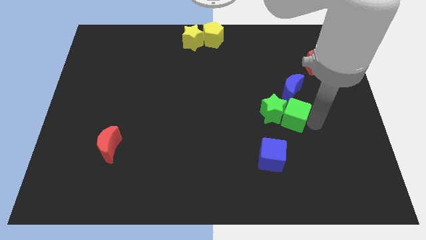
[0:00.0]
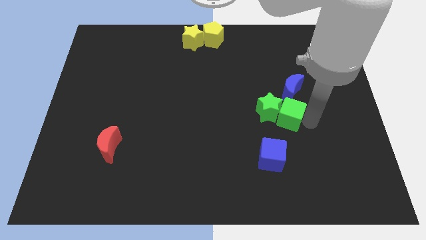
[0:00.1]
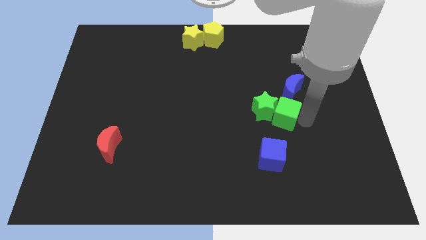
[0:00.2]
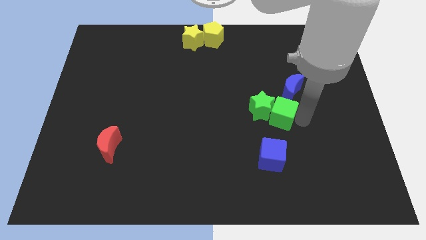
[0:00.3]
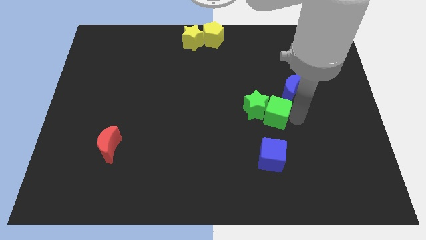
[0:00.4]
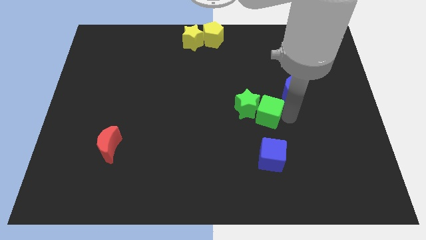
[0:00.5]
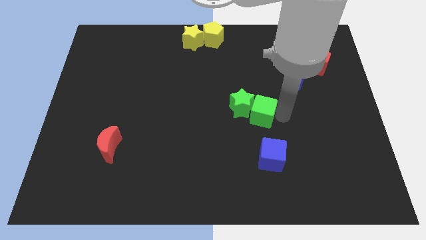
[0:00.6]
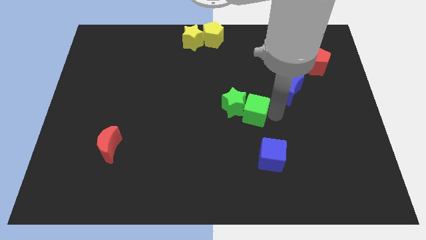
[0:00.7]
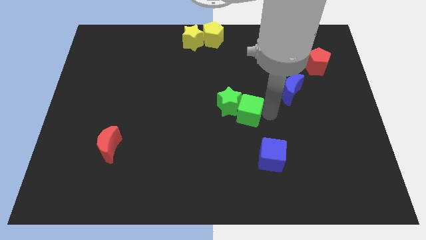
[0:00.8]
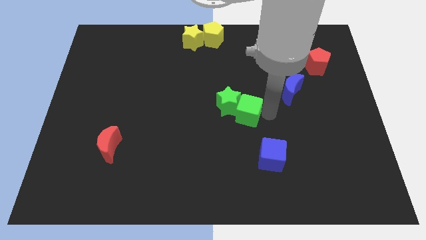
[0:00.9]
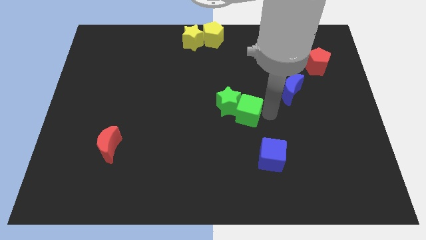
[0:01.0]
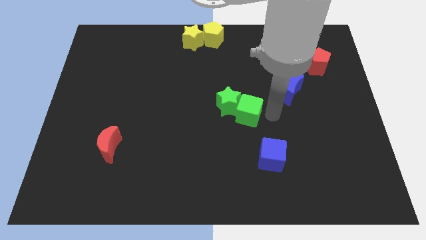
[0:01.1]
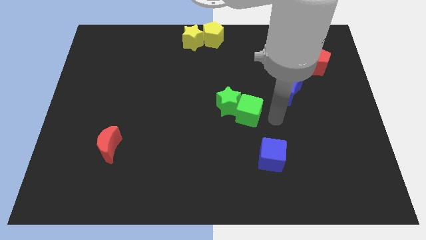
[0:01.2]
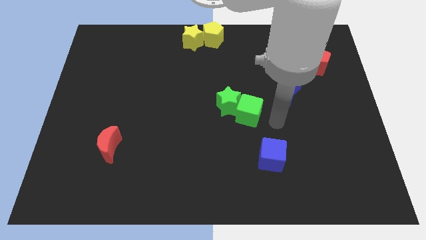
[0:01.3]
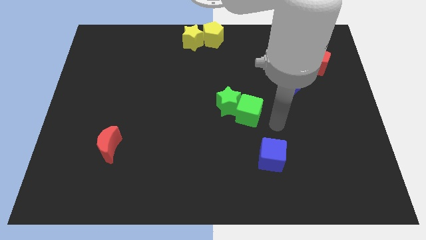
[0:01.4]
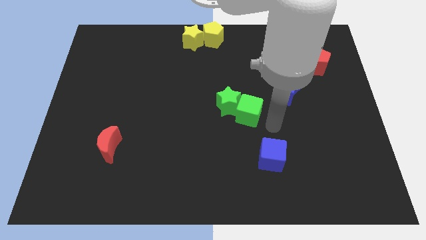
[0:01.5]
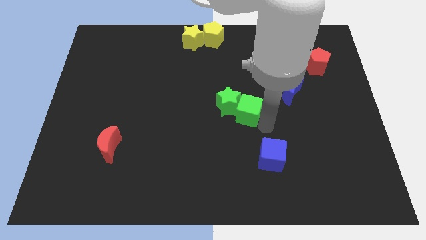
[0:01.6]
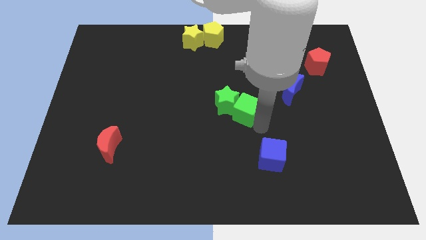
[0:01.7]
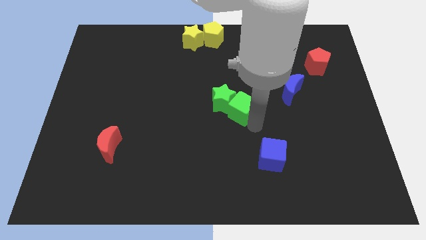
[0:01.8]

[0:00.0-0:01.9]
push the green blocks to the center of the board

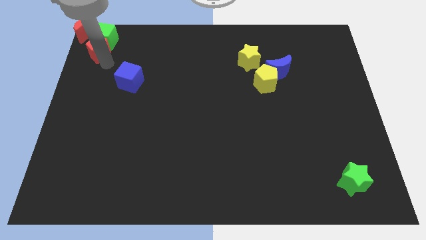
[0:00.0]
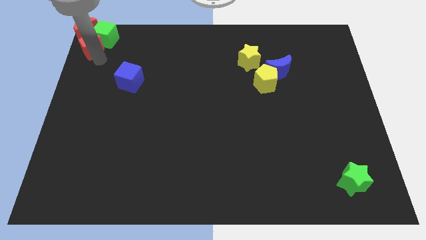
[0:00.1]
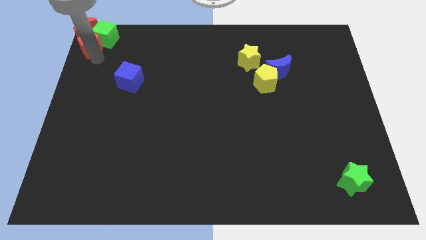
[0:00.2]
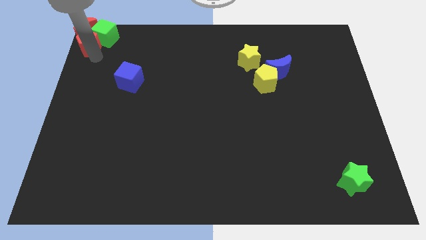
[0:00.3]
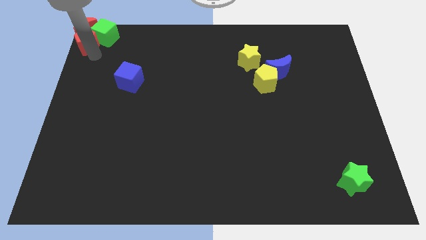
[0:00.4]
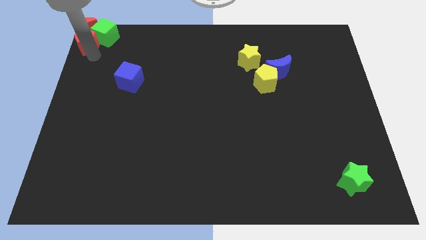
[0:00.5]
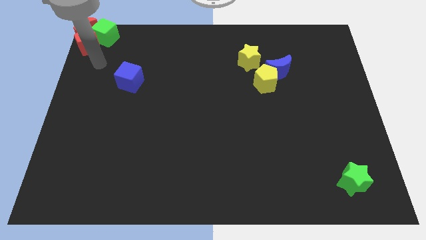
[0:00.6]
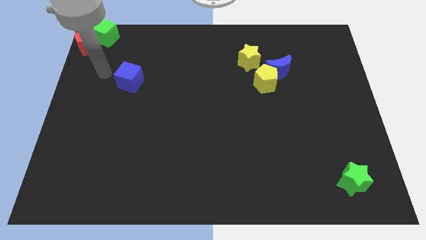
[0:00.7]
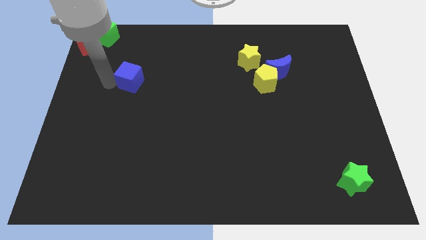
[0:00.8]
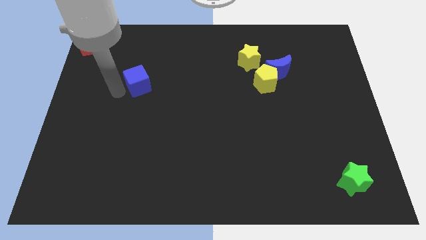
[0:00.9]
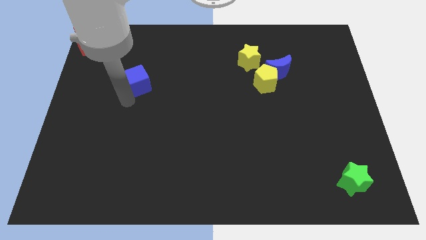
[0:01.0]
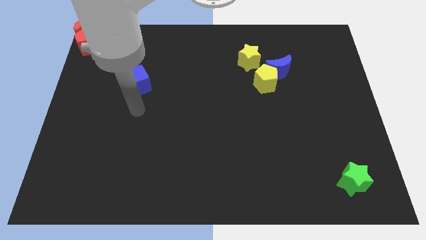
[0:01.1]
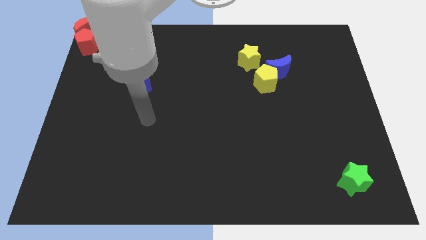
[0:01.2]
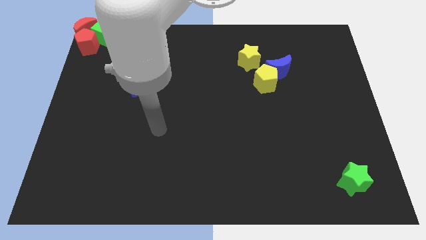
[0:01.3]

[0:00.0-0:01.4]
tap the blue cube

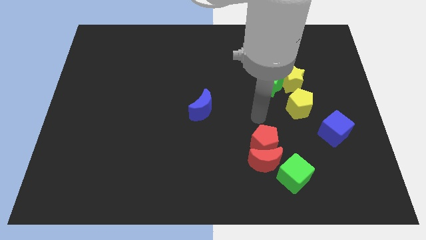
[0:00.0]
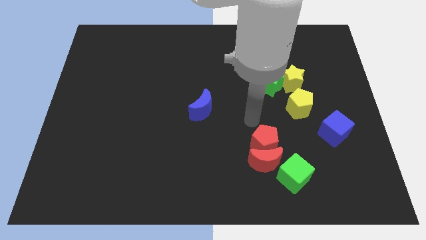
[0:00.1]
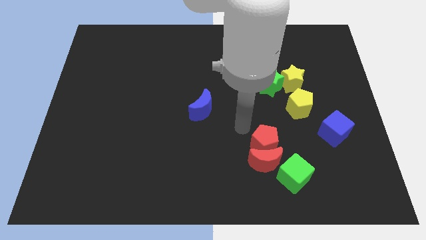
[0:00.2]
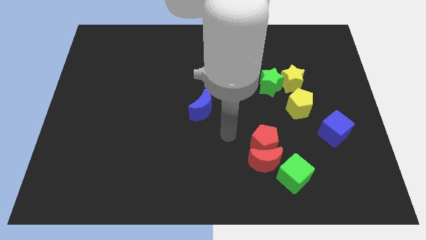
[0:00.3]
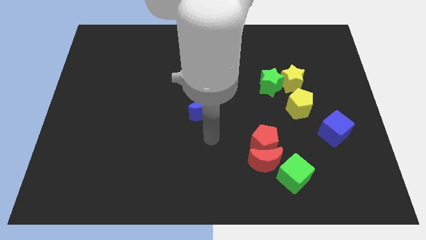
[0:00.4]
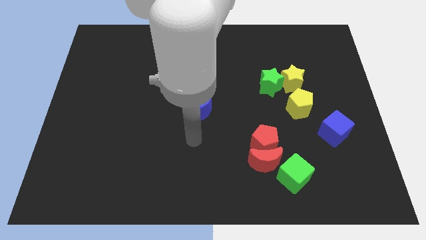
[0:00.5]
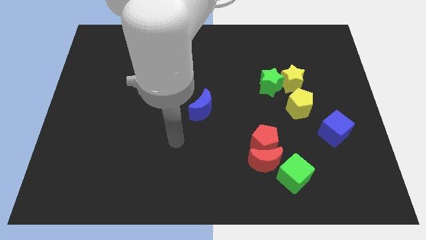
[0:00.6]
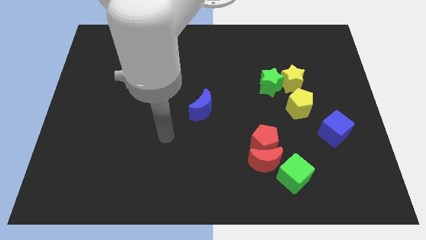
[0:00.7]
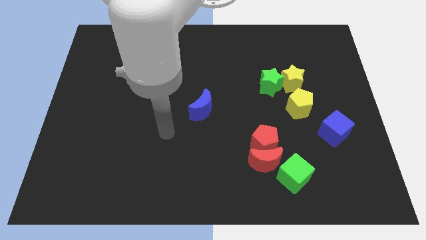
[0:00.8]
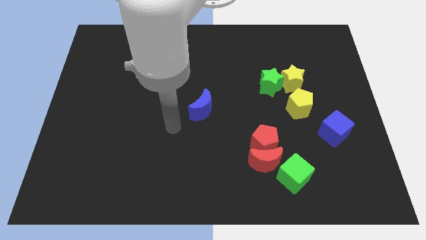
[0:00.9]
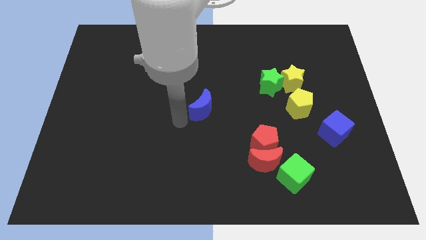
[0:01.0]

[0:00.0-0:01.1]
slide your hand to bottom left of blue moon

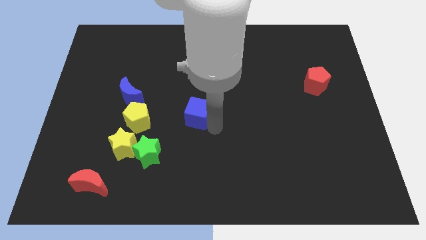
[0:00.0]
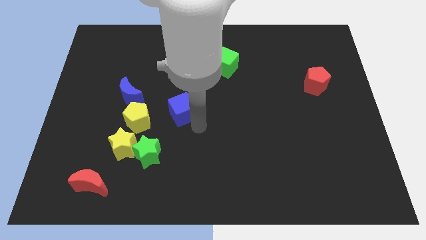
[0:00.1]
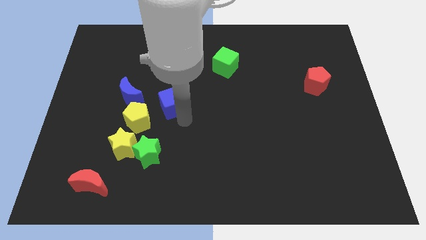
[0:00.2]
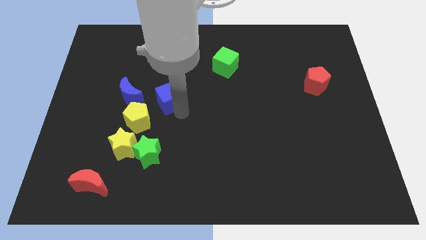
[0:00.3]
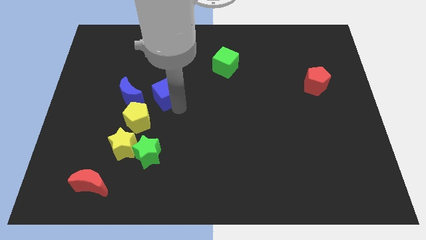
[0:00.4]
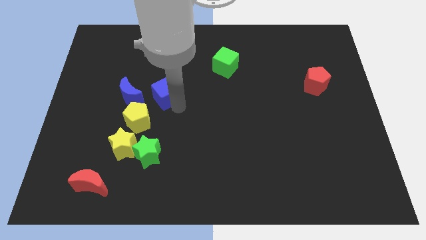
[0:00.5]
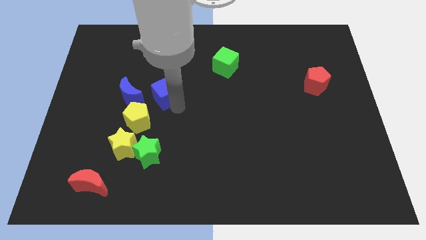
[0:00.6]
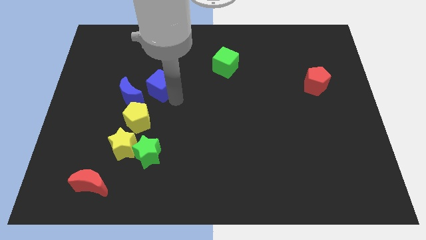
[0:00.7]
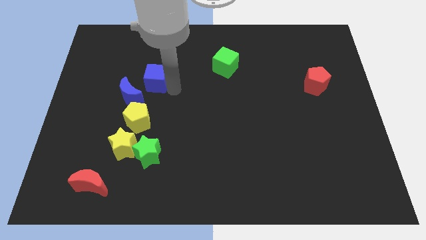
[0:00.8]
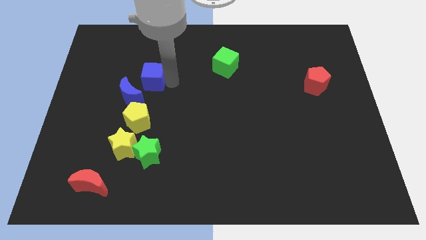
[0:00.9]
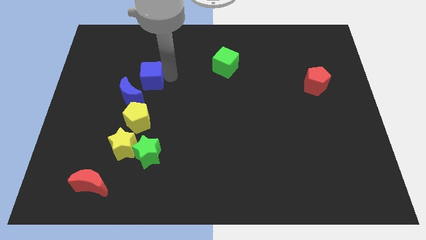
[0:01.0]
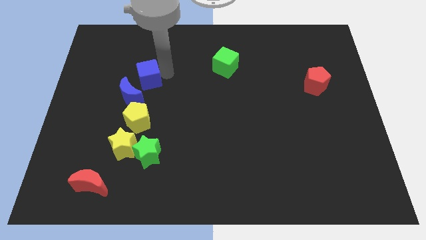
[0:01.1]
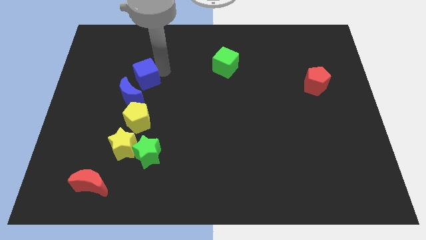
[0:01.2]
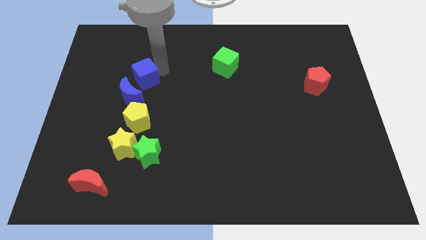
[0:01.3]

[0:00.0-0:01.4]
move the blue cube above the blue crescent

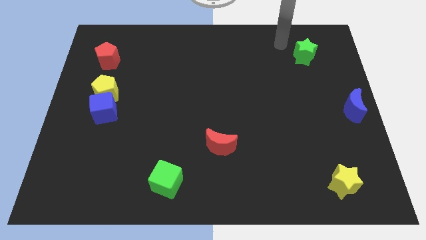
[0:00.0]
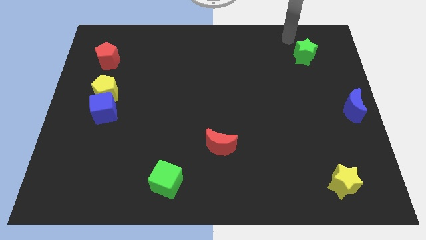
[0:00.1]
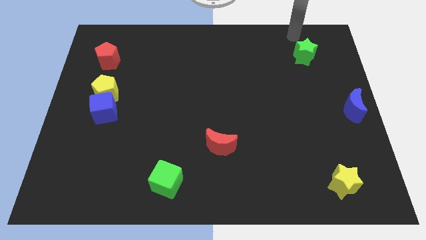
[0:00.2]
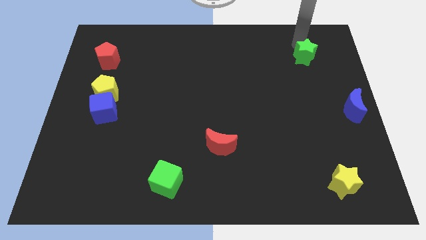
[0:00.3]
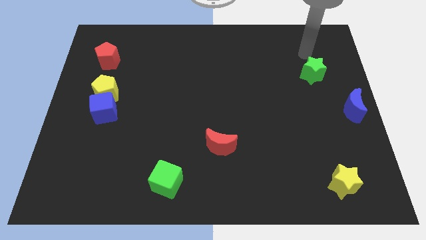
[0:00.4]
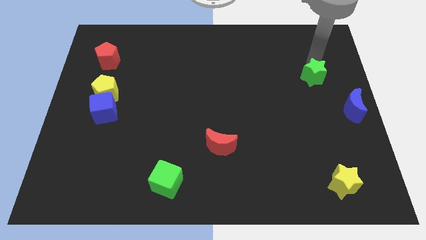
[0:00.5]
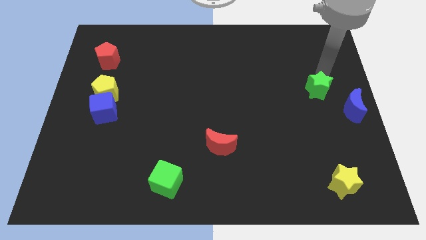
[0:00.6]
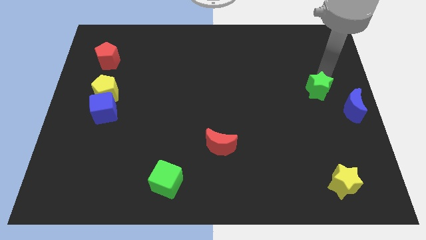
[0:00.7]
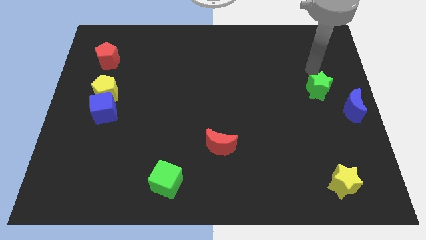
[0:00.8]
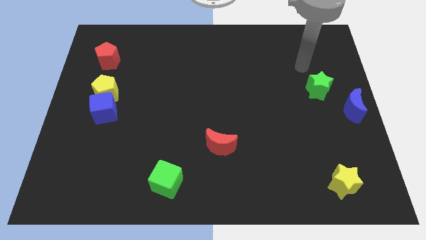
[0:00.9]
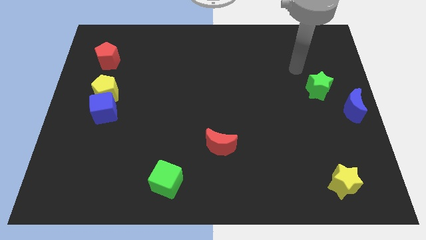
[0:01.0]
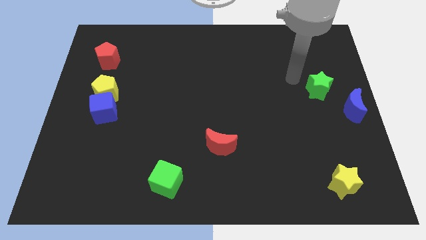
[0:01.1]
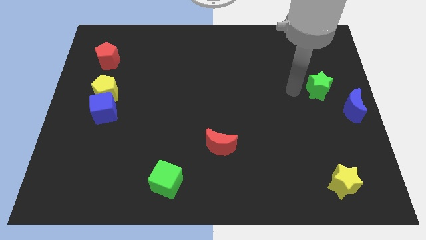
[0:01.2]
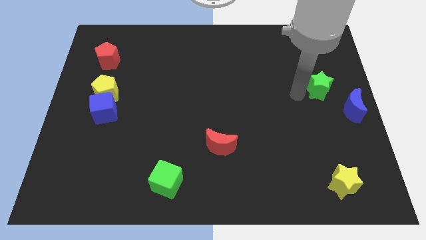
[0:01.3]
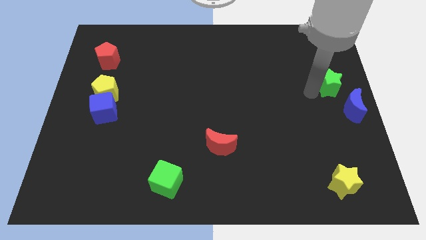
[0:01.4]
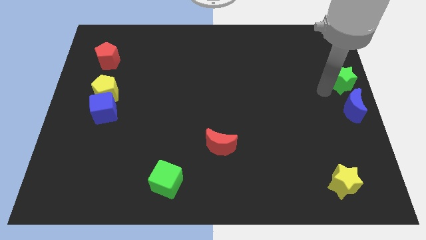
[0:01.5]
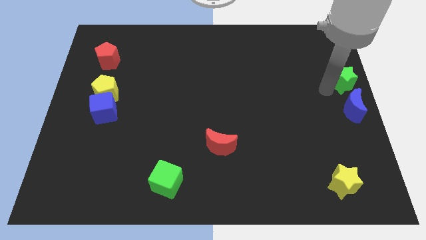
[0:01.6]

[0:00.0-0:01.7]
place the green star above the blue moon

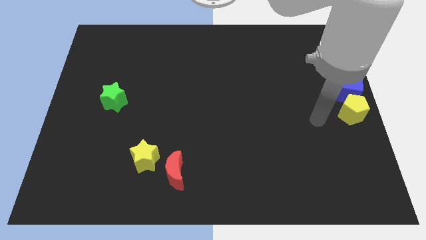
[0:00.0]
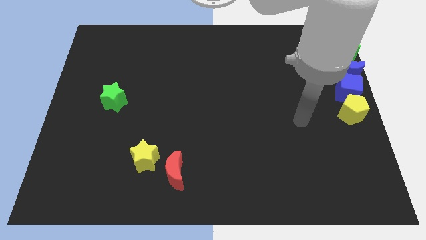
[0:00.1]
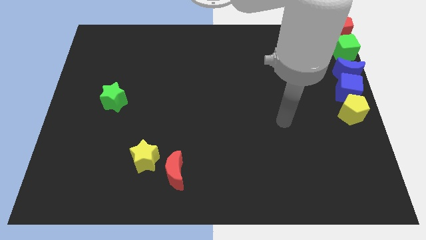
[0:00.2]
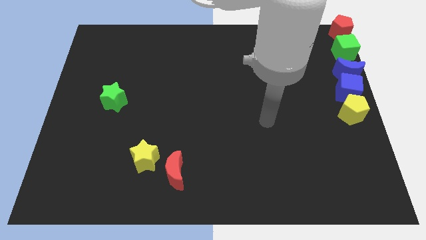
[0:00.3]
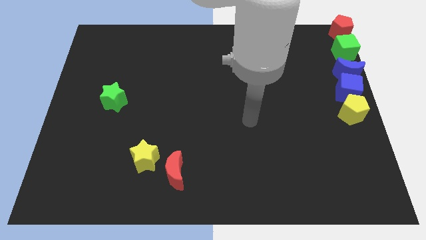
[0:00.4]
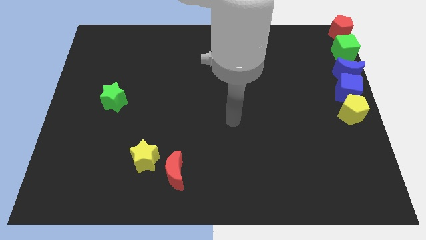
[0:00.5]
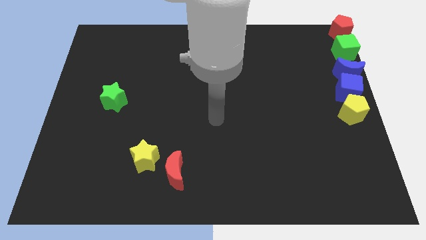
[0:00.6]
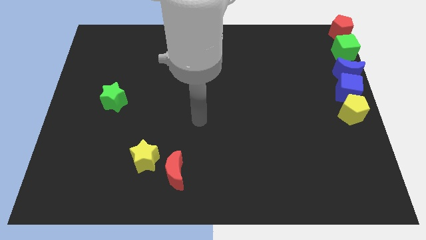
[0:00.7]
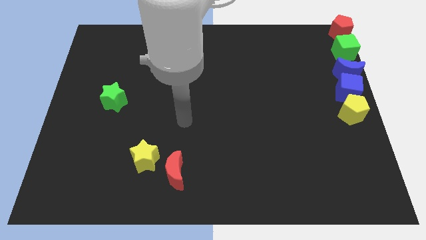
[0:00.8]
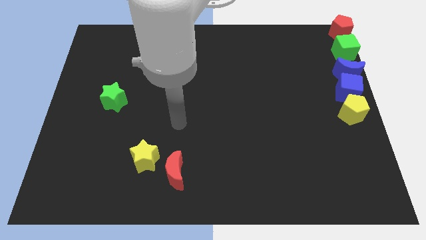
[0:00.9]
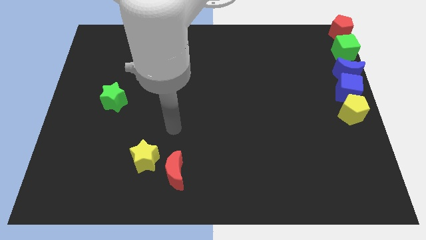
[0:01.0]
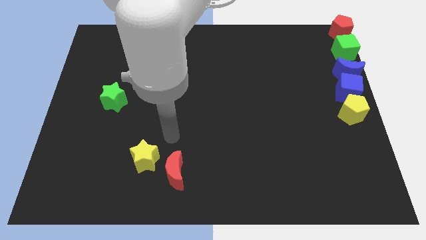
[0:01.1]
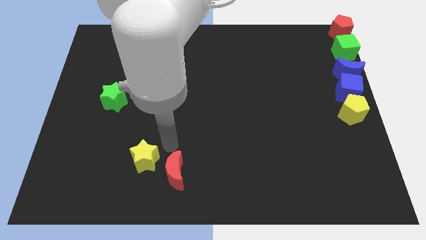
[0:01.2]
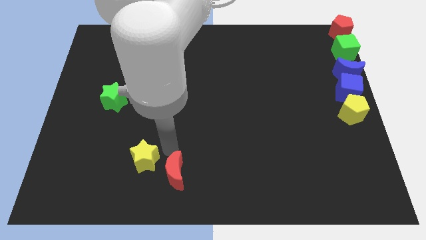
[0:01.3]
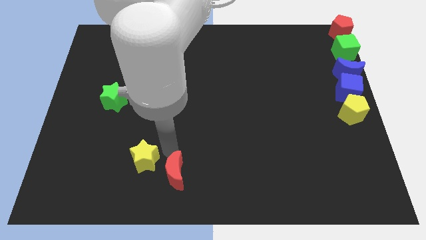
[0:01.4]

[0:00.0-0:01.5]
point your arm at the top side of the red crescent
